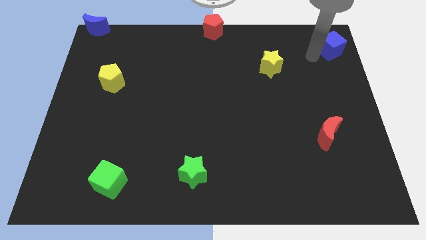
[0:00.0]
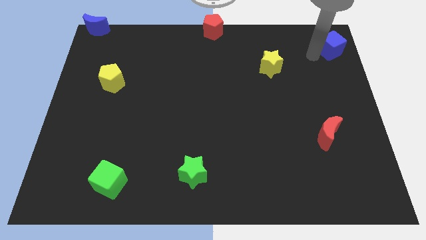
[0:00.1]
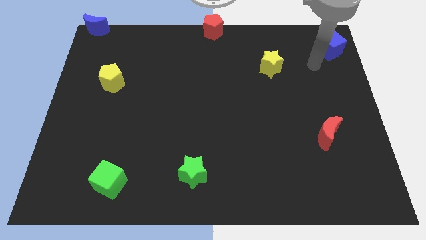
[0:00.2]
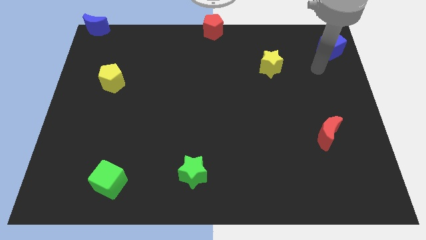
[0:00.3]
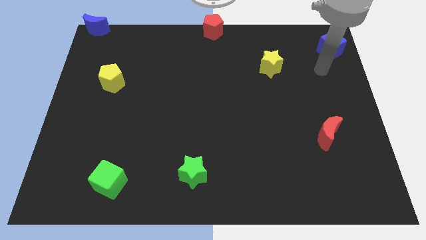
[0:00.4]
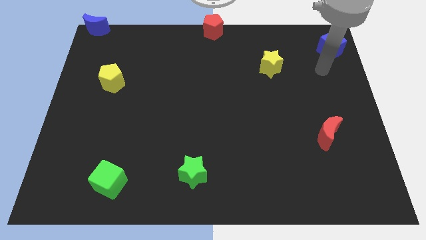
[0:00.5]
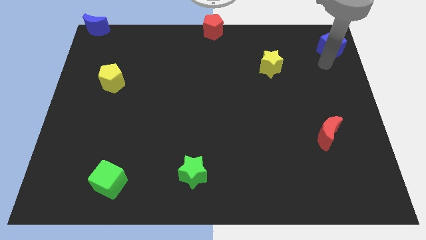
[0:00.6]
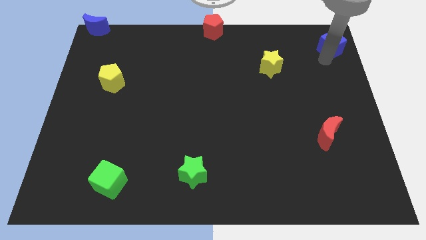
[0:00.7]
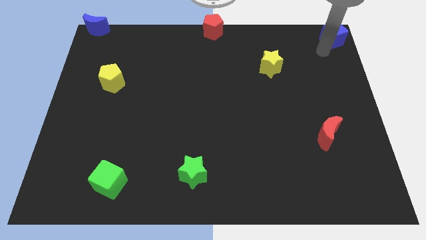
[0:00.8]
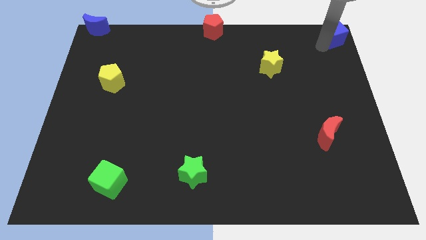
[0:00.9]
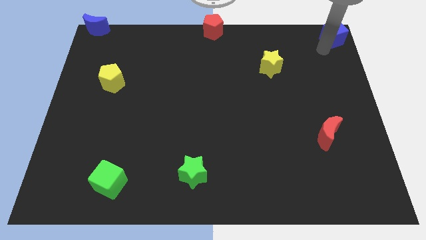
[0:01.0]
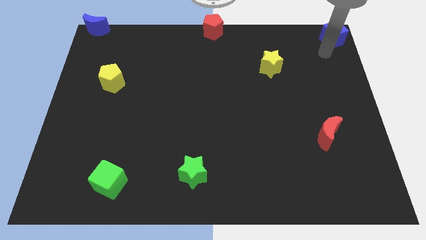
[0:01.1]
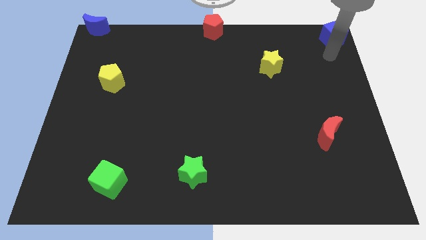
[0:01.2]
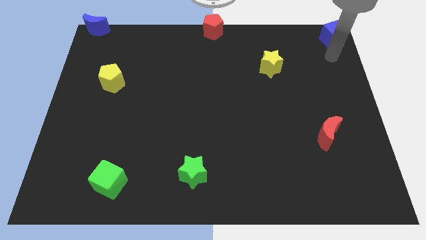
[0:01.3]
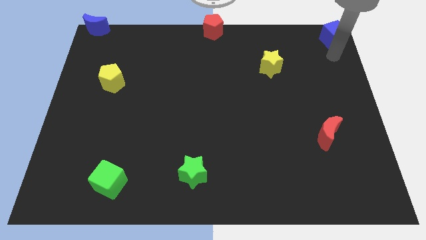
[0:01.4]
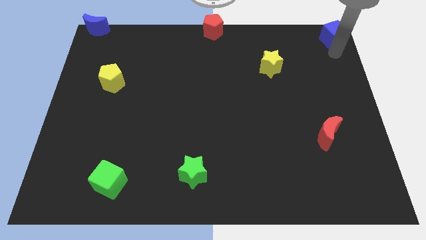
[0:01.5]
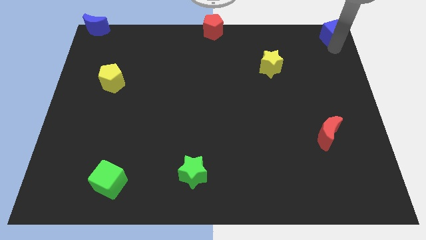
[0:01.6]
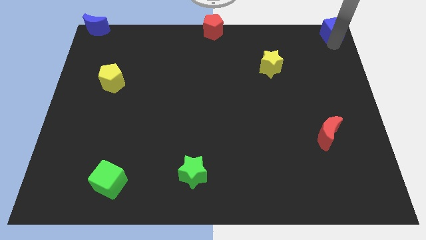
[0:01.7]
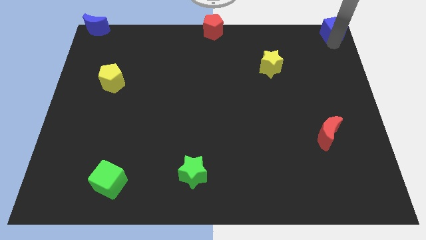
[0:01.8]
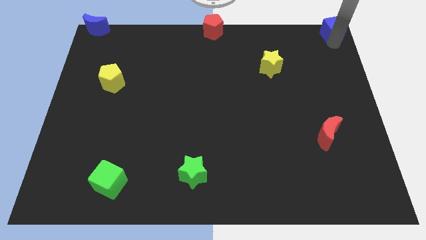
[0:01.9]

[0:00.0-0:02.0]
move the blue cube to the top right

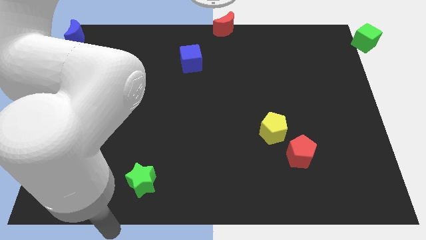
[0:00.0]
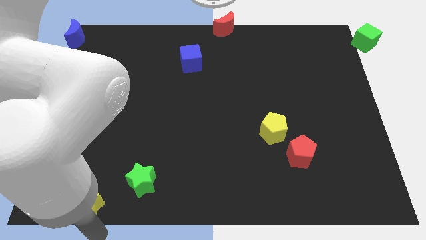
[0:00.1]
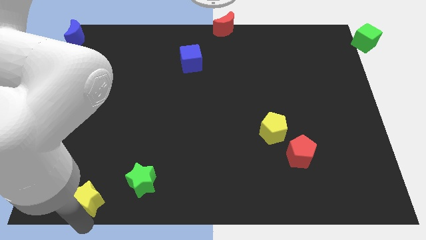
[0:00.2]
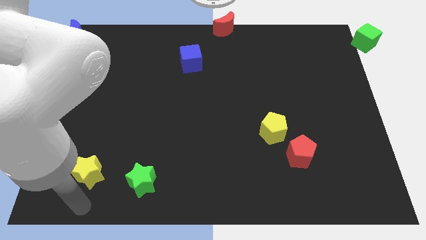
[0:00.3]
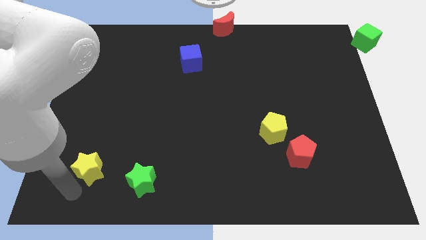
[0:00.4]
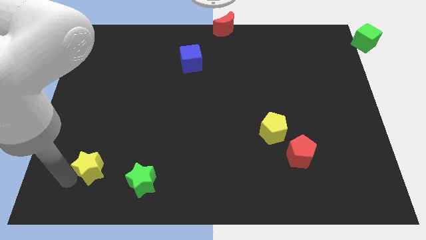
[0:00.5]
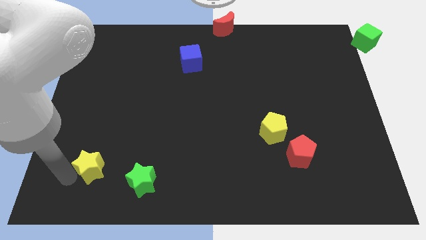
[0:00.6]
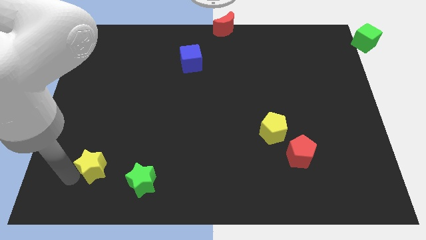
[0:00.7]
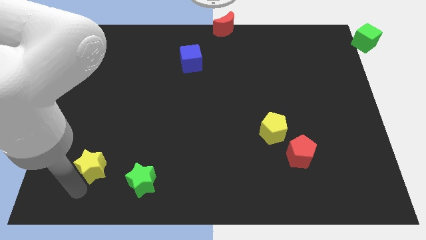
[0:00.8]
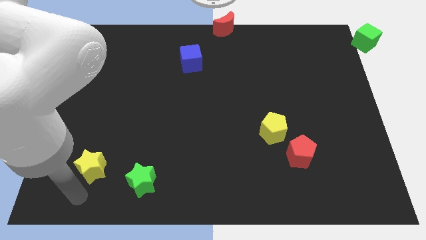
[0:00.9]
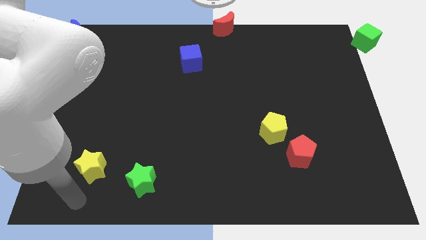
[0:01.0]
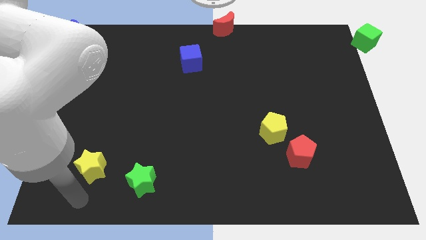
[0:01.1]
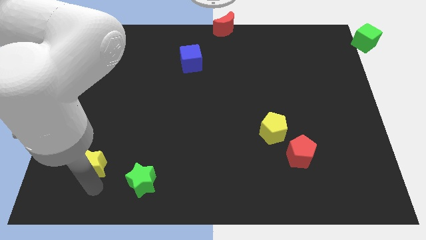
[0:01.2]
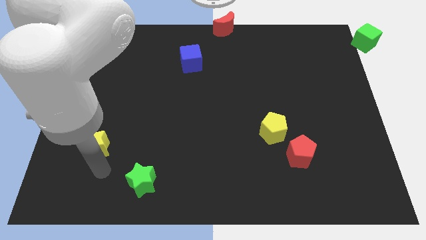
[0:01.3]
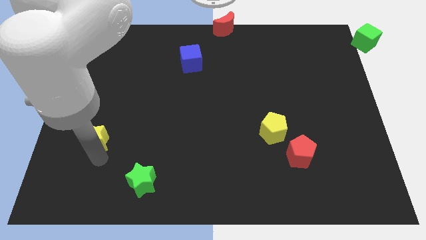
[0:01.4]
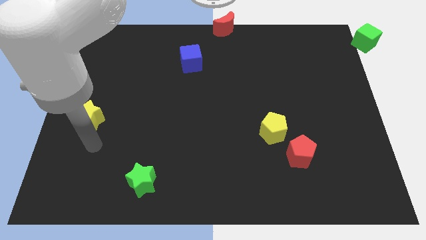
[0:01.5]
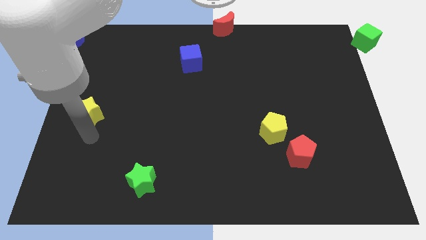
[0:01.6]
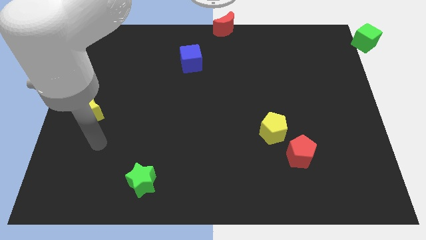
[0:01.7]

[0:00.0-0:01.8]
place the yellow star above the green star

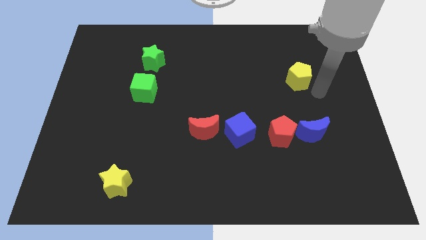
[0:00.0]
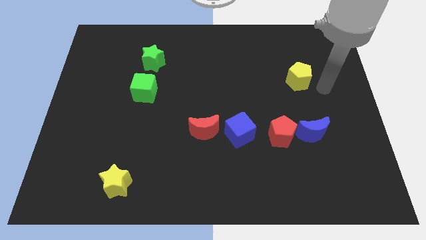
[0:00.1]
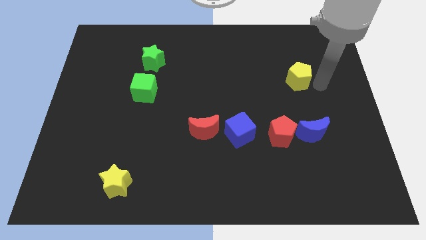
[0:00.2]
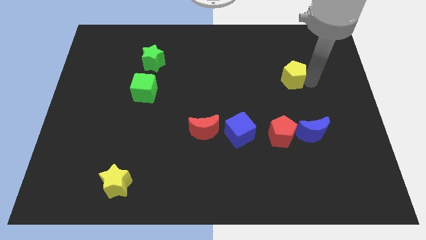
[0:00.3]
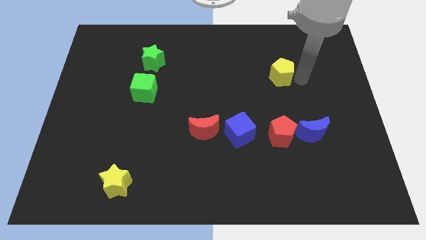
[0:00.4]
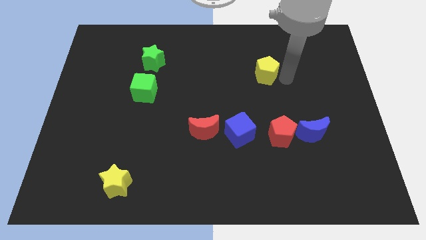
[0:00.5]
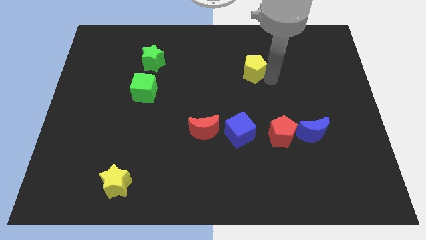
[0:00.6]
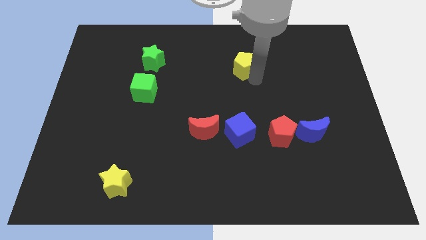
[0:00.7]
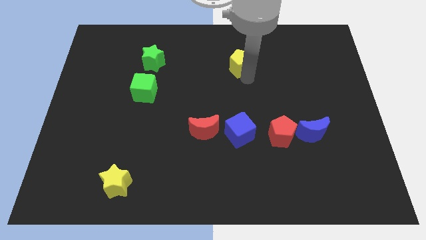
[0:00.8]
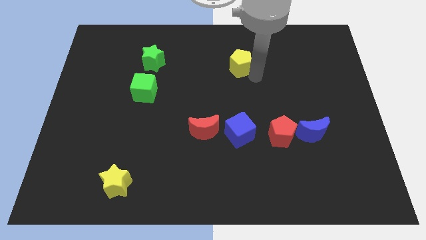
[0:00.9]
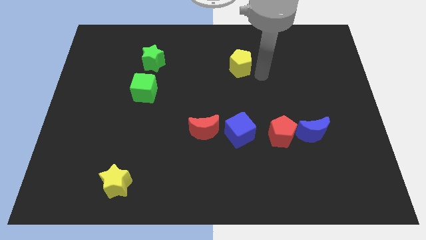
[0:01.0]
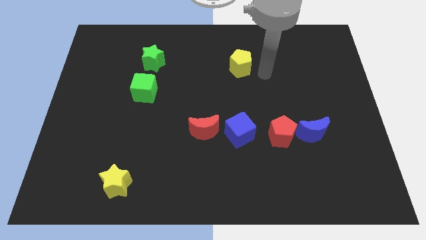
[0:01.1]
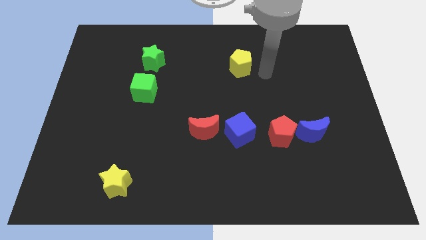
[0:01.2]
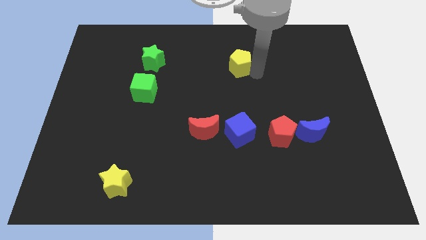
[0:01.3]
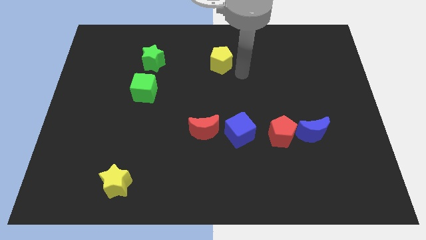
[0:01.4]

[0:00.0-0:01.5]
push the yellow pentagon to the left

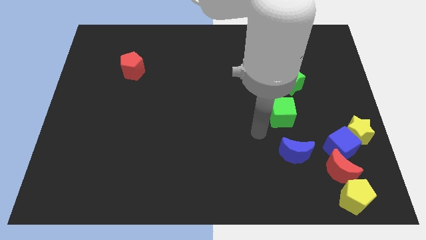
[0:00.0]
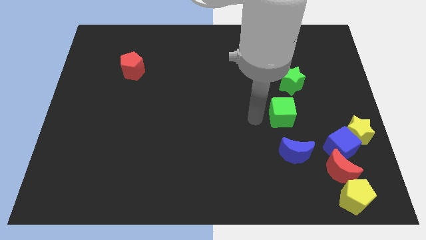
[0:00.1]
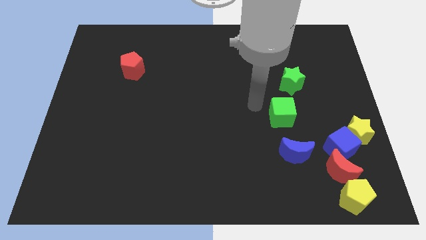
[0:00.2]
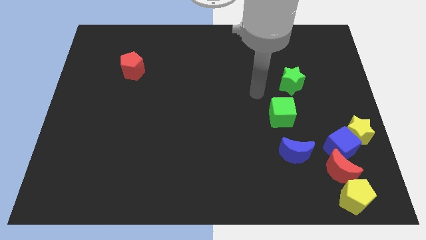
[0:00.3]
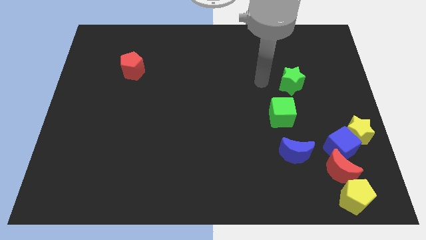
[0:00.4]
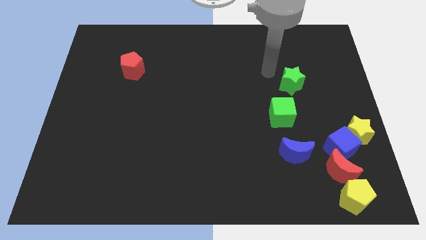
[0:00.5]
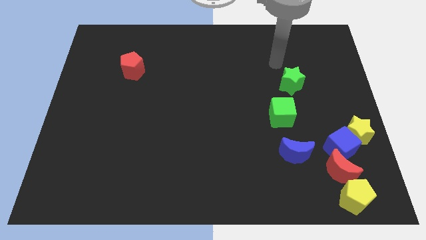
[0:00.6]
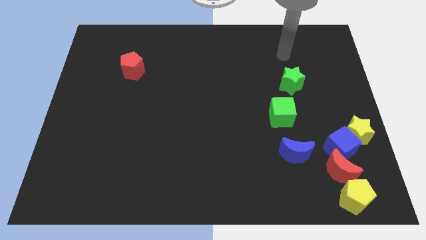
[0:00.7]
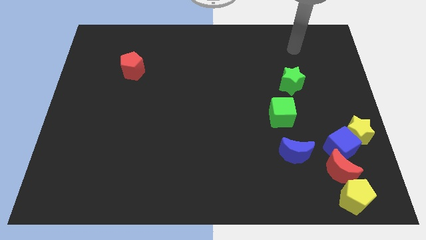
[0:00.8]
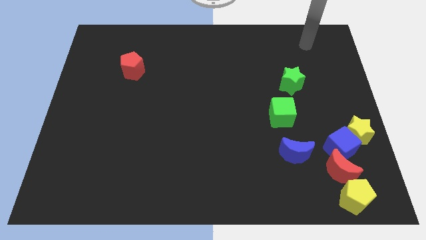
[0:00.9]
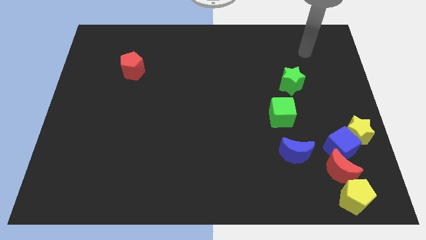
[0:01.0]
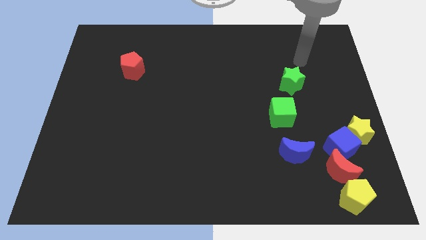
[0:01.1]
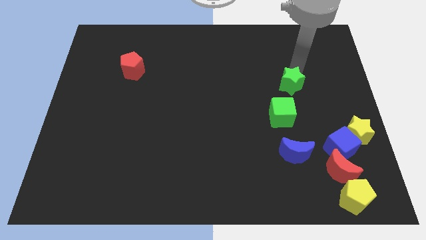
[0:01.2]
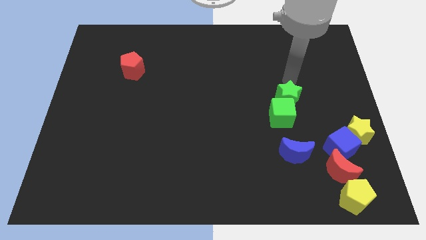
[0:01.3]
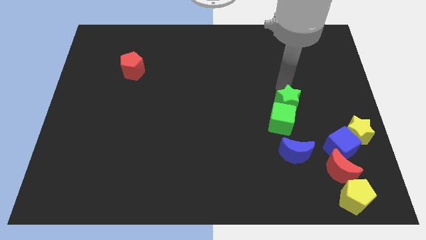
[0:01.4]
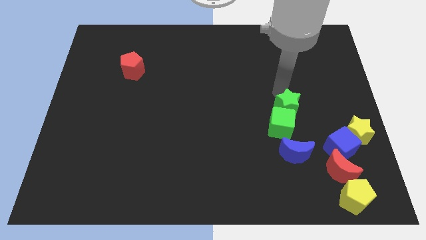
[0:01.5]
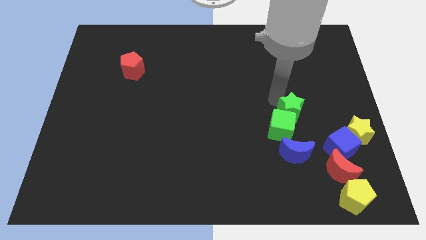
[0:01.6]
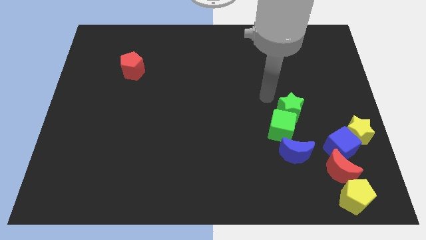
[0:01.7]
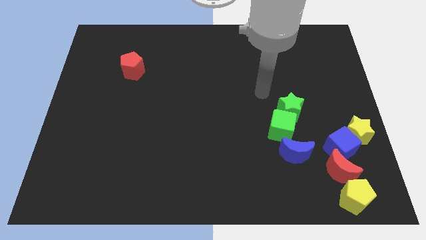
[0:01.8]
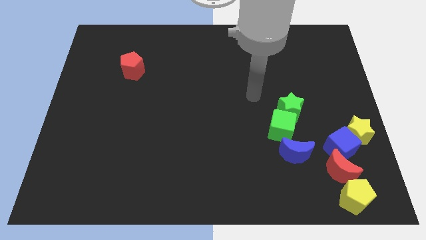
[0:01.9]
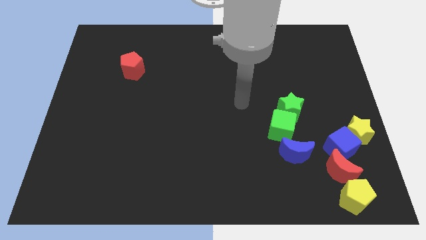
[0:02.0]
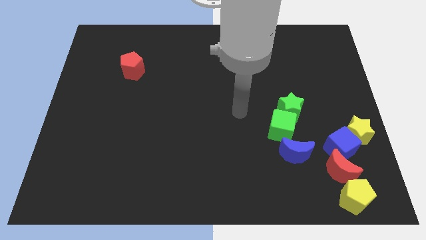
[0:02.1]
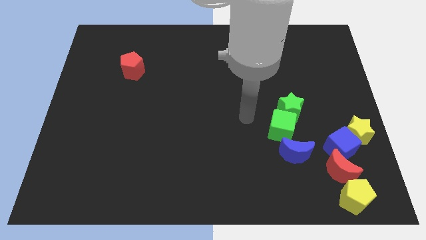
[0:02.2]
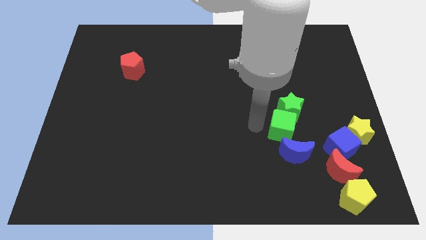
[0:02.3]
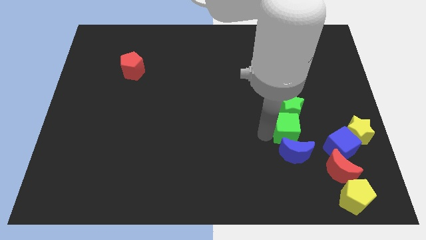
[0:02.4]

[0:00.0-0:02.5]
push the green star into green cube

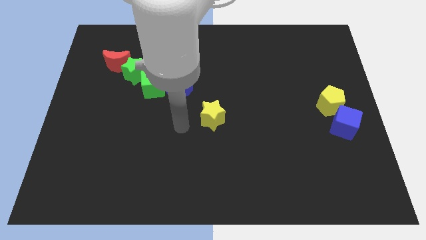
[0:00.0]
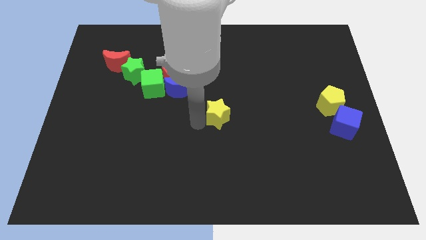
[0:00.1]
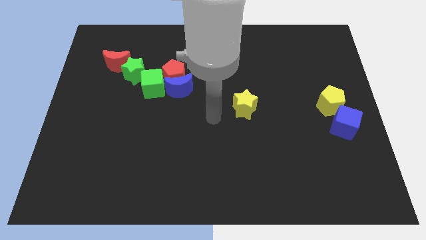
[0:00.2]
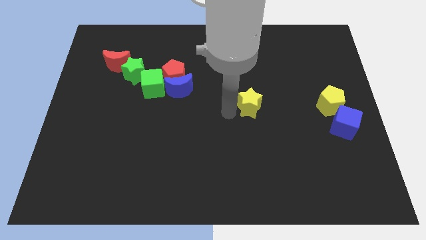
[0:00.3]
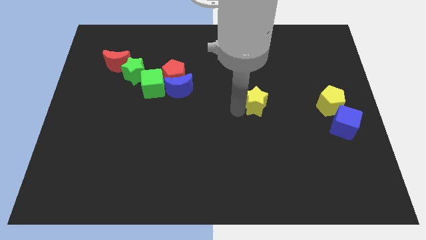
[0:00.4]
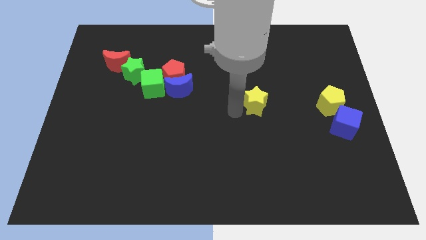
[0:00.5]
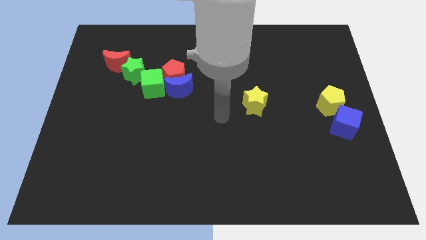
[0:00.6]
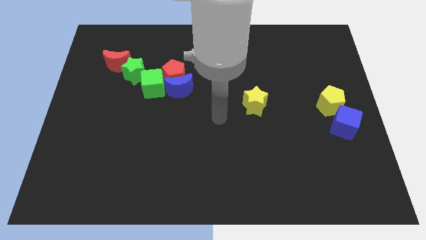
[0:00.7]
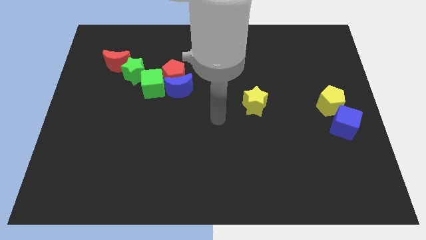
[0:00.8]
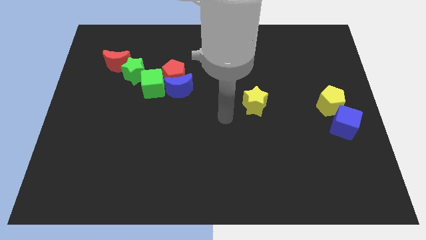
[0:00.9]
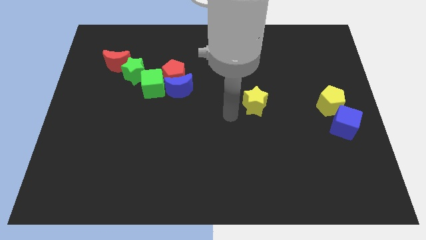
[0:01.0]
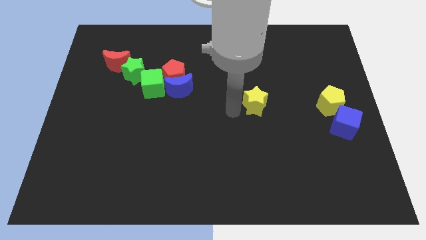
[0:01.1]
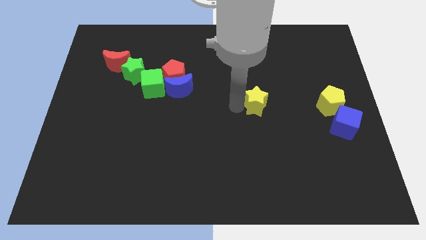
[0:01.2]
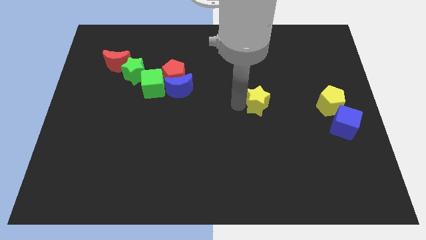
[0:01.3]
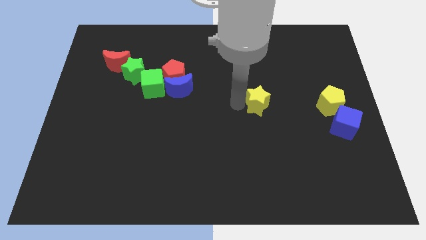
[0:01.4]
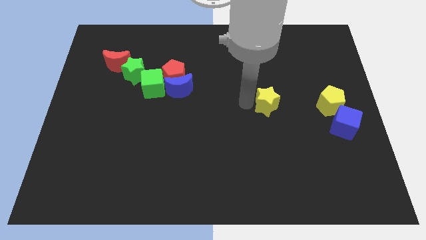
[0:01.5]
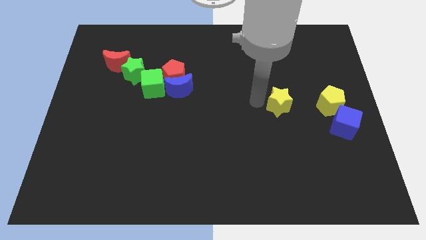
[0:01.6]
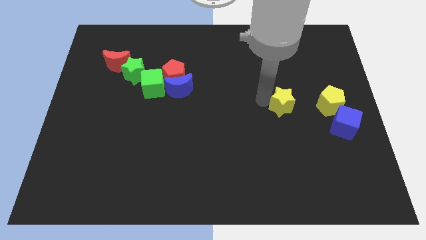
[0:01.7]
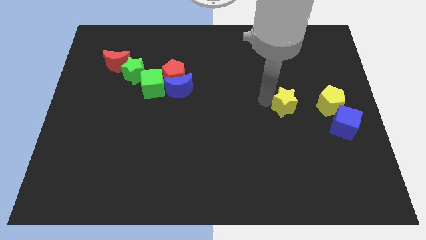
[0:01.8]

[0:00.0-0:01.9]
push the yellow star towards the left of the yellow pentagon
